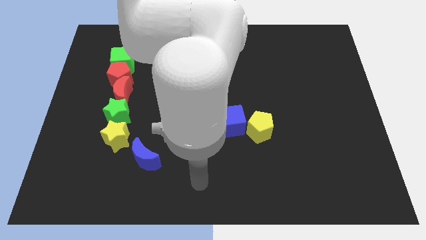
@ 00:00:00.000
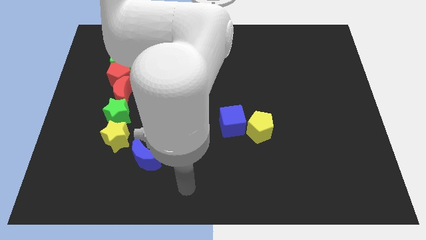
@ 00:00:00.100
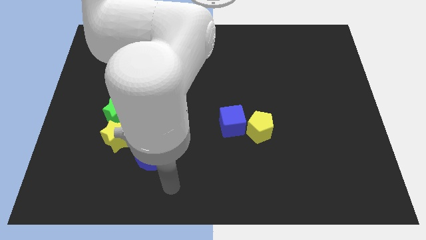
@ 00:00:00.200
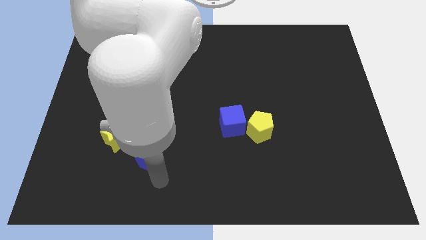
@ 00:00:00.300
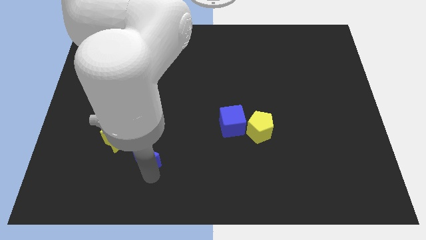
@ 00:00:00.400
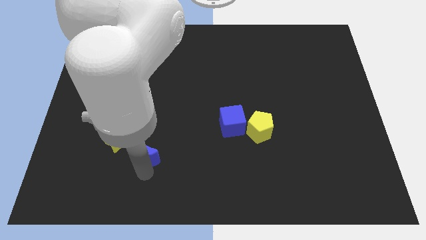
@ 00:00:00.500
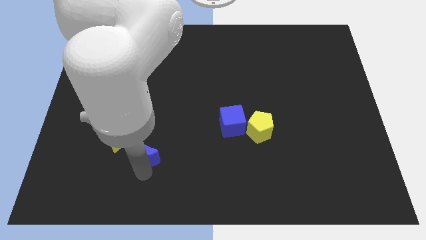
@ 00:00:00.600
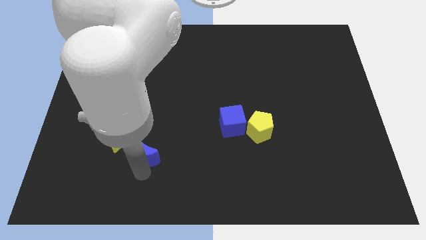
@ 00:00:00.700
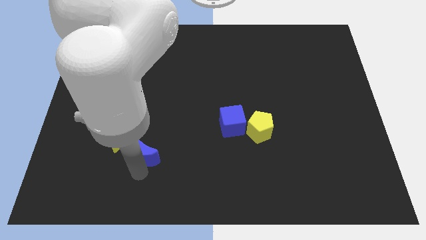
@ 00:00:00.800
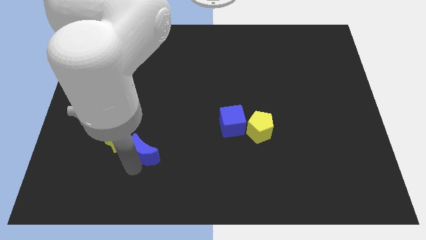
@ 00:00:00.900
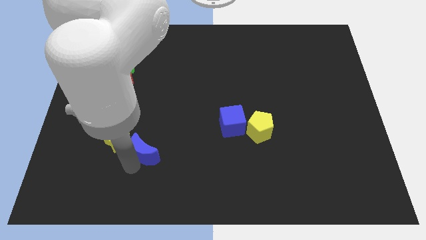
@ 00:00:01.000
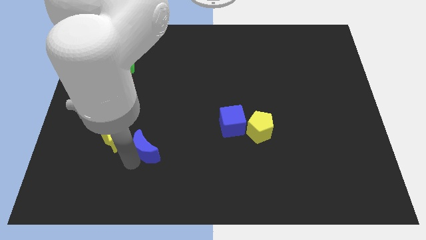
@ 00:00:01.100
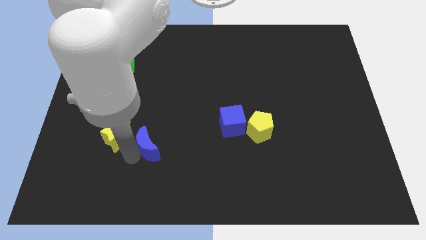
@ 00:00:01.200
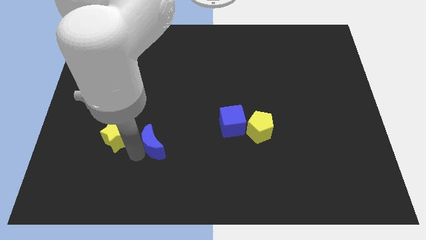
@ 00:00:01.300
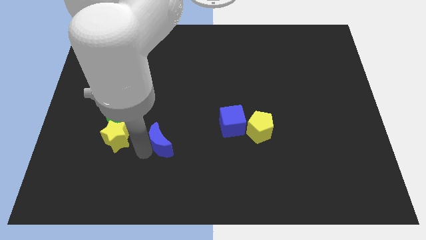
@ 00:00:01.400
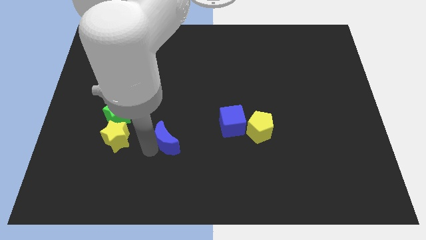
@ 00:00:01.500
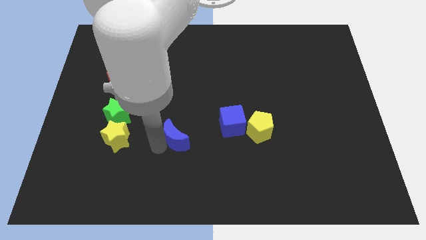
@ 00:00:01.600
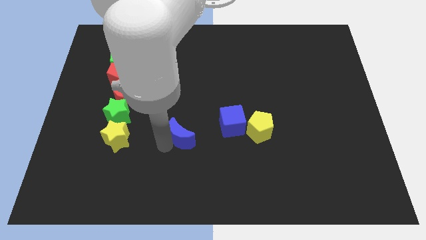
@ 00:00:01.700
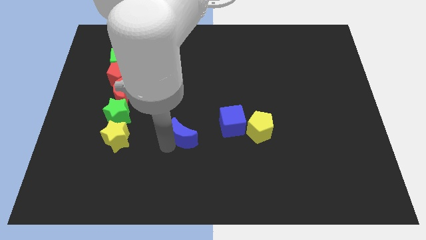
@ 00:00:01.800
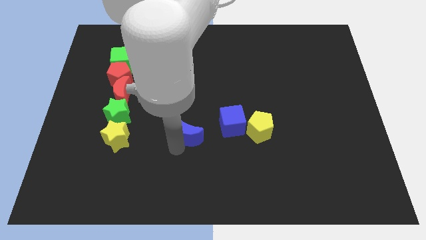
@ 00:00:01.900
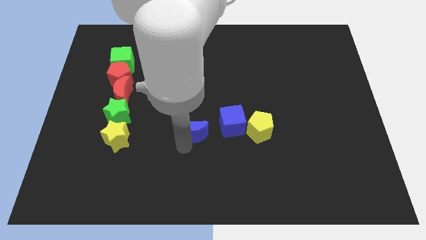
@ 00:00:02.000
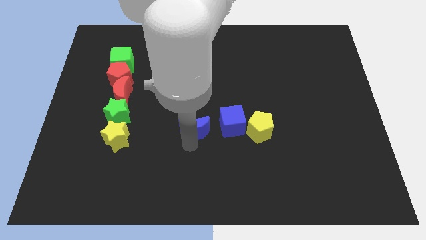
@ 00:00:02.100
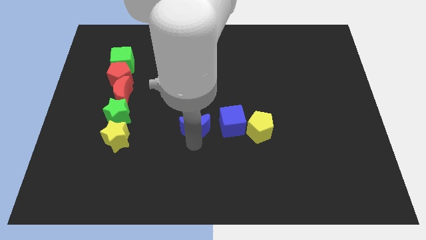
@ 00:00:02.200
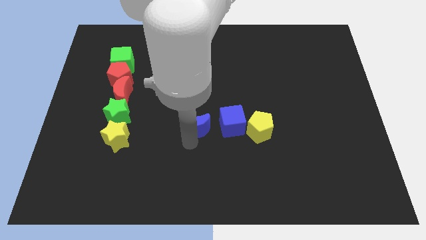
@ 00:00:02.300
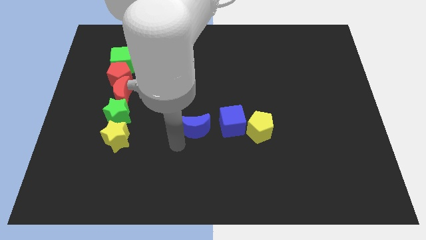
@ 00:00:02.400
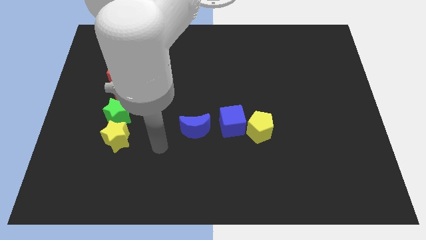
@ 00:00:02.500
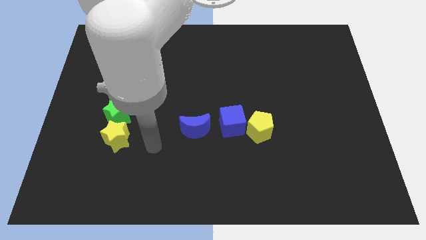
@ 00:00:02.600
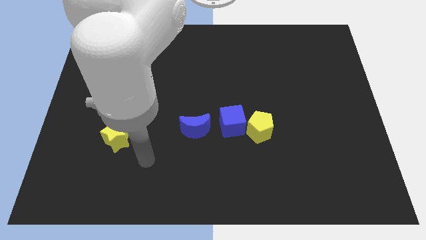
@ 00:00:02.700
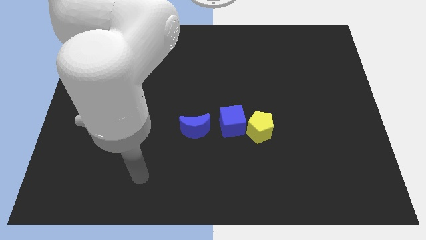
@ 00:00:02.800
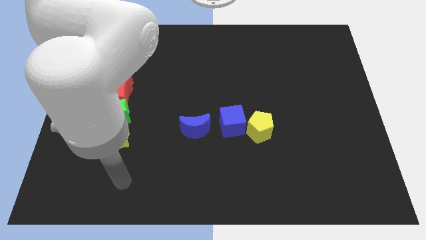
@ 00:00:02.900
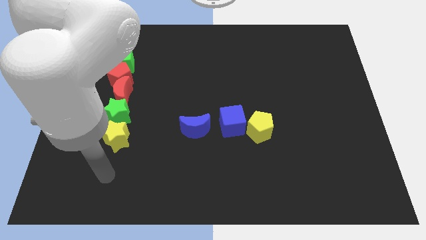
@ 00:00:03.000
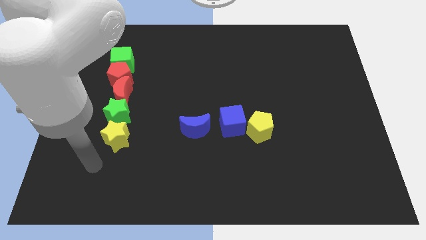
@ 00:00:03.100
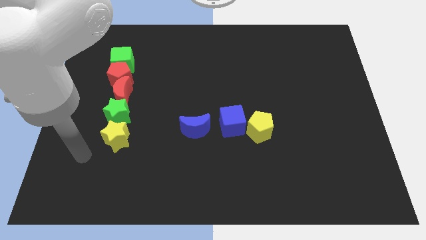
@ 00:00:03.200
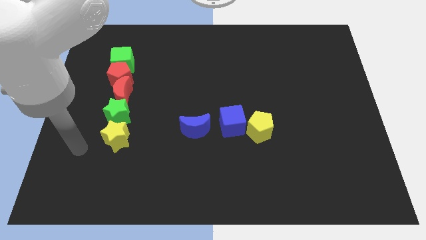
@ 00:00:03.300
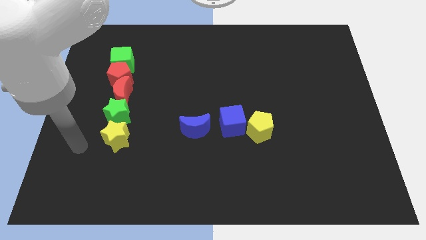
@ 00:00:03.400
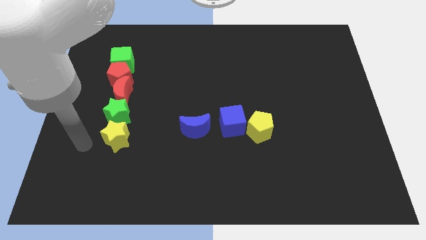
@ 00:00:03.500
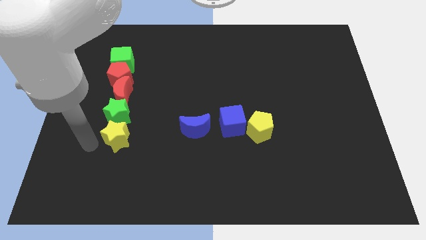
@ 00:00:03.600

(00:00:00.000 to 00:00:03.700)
move the blue crescent to the left of the blue cube

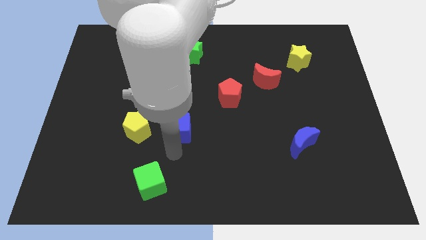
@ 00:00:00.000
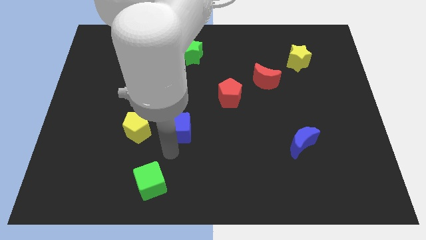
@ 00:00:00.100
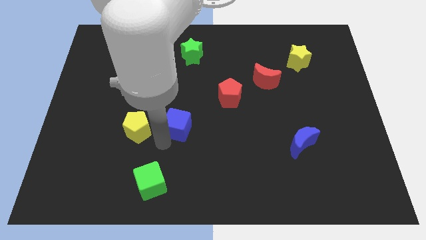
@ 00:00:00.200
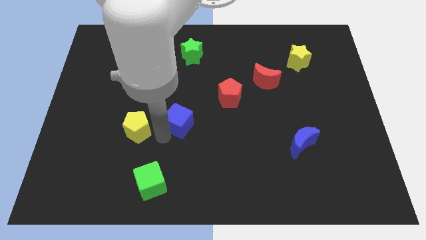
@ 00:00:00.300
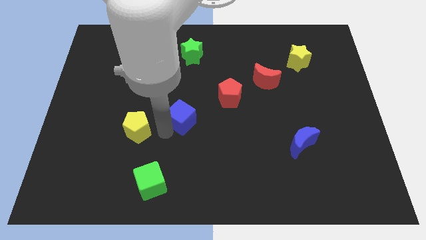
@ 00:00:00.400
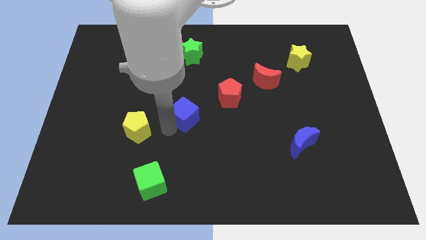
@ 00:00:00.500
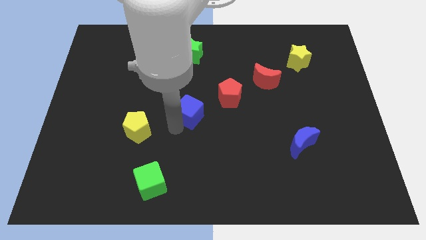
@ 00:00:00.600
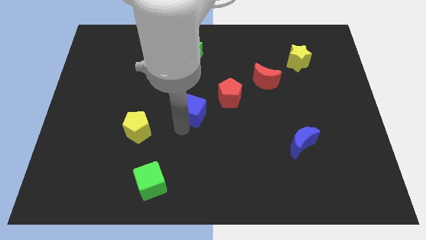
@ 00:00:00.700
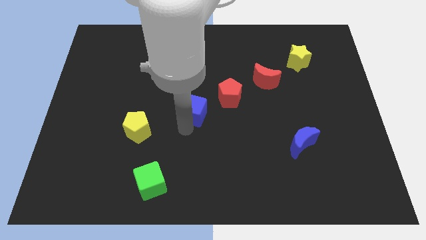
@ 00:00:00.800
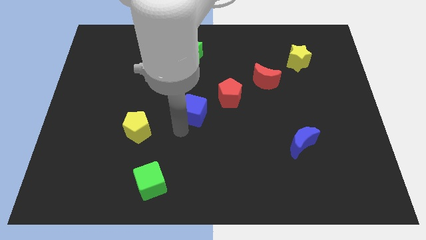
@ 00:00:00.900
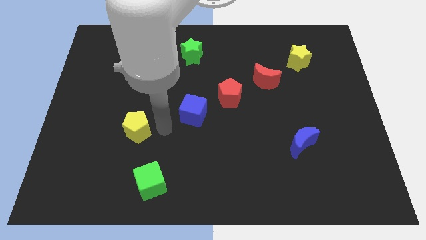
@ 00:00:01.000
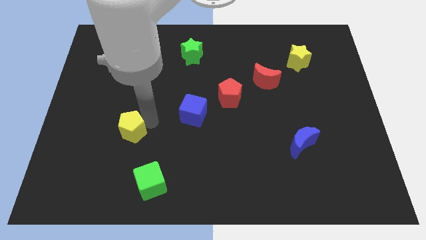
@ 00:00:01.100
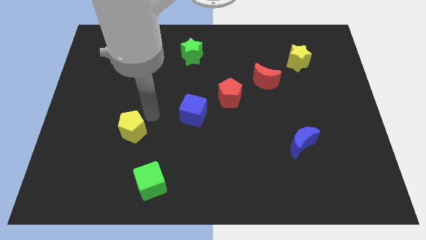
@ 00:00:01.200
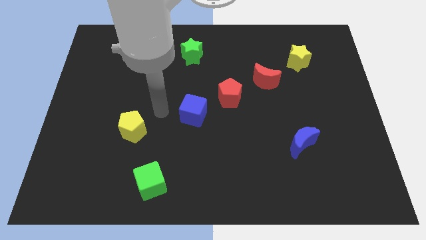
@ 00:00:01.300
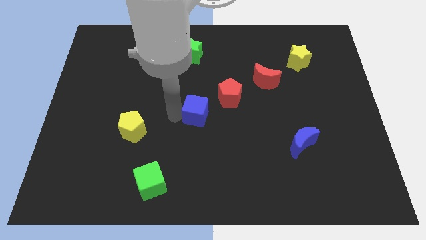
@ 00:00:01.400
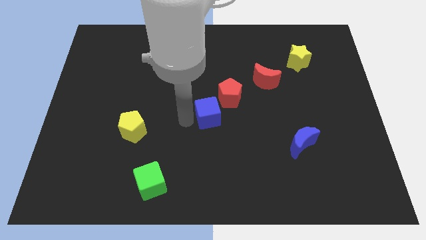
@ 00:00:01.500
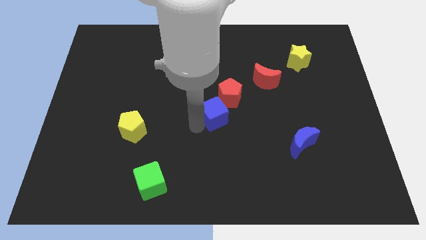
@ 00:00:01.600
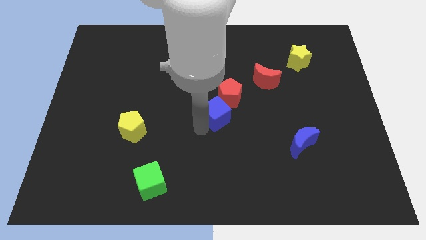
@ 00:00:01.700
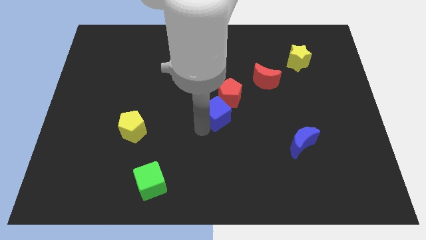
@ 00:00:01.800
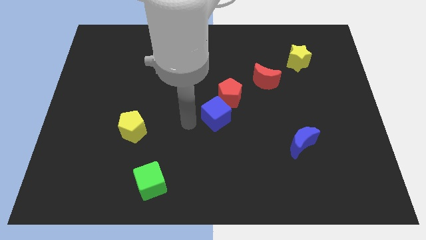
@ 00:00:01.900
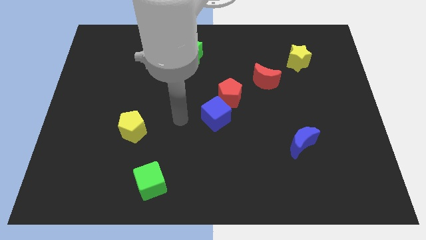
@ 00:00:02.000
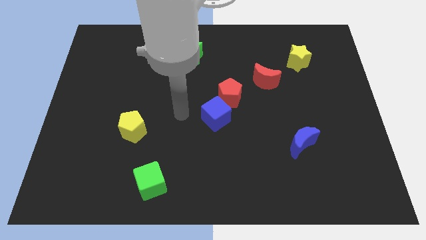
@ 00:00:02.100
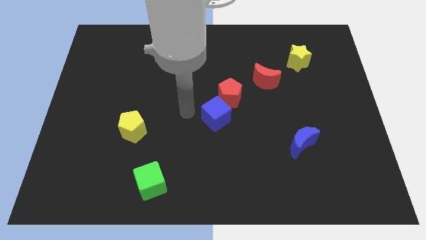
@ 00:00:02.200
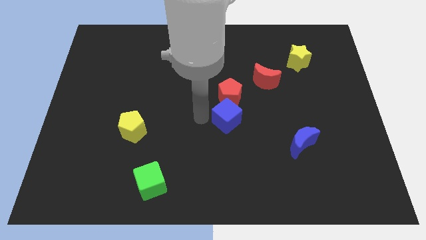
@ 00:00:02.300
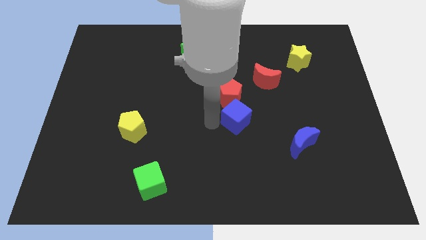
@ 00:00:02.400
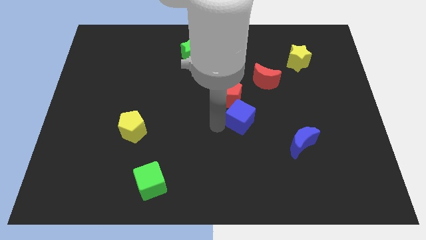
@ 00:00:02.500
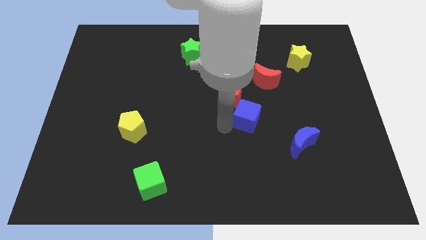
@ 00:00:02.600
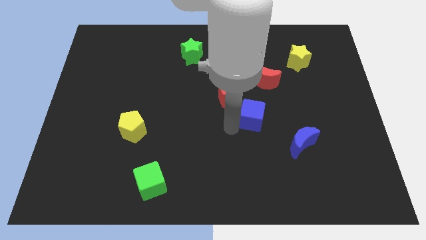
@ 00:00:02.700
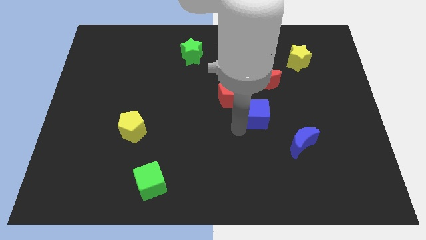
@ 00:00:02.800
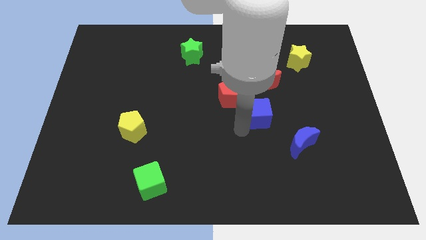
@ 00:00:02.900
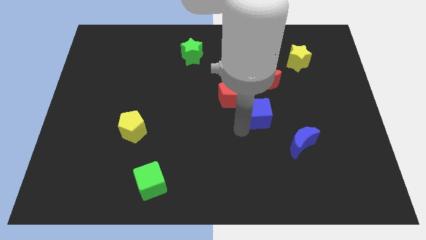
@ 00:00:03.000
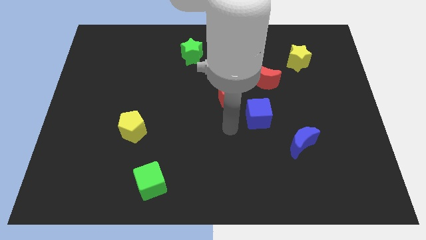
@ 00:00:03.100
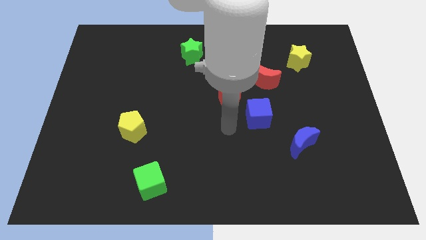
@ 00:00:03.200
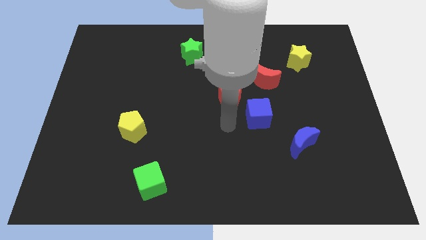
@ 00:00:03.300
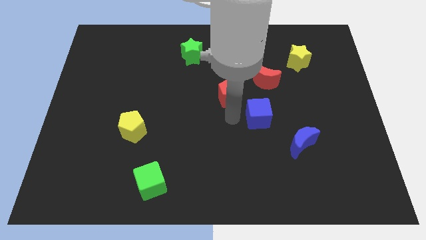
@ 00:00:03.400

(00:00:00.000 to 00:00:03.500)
slide the blue cube in between blue moon and red pentagon

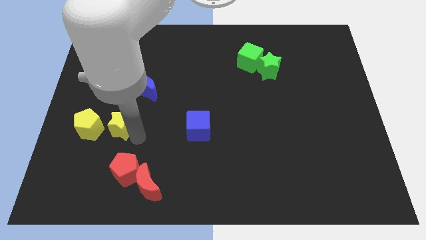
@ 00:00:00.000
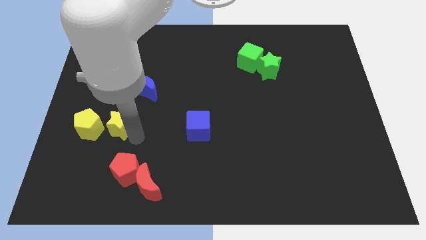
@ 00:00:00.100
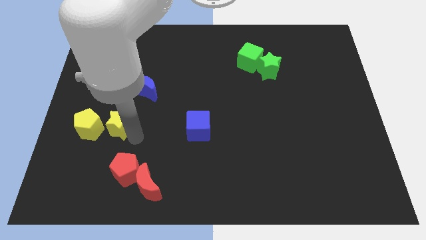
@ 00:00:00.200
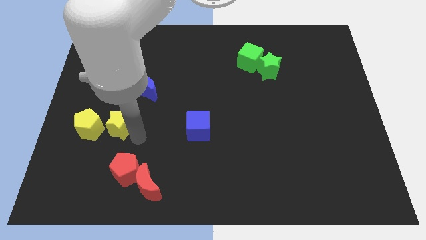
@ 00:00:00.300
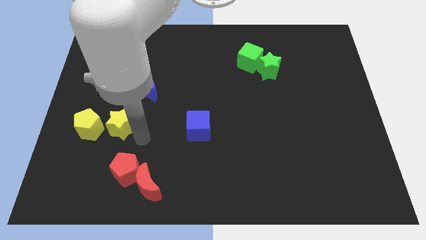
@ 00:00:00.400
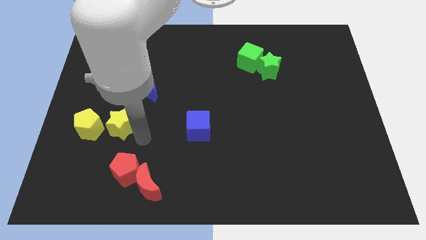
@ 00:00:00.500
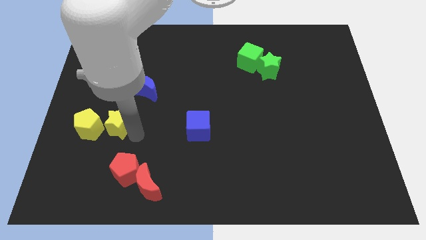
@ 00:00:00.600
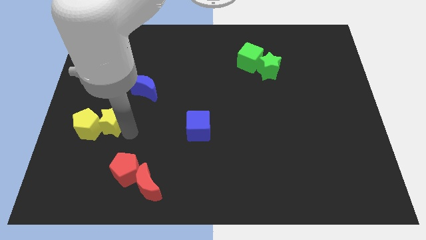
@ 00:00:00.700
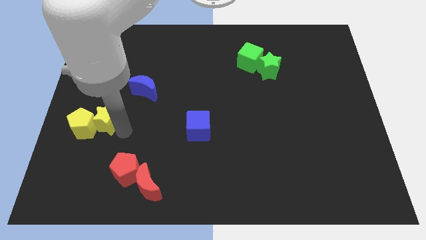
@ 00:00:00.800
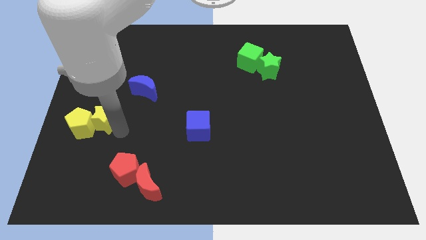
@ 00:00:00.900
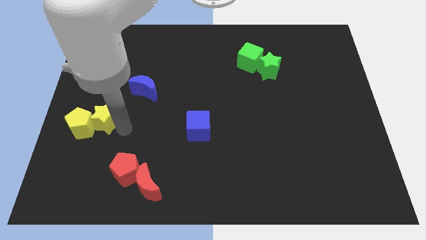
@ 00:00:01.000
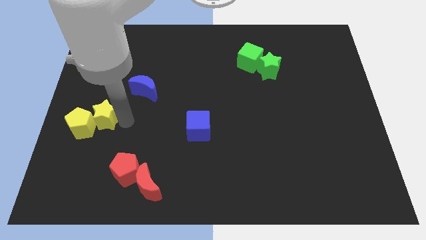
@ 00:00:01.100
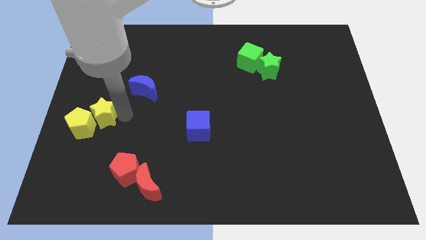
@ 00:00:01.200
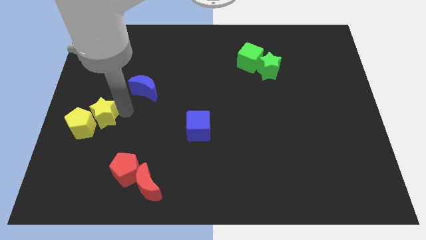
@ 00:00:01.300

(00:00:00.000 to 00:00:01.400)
push the yellow star into the yellow pentagon from the right

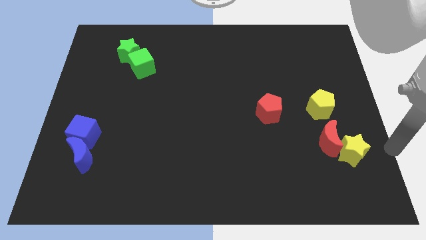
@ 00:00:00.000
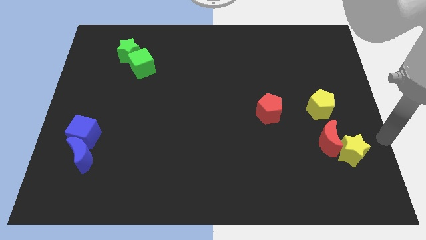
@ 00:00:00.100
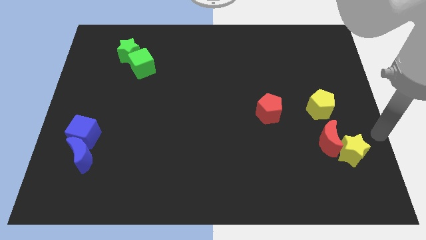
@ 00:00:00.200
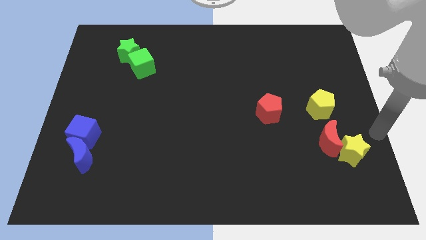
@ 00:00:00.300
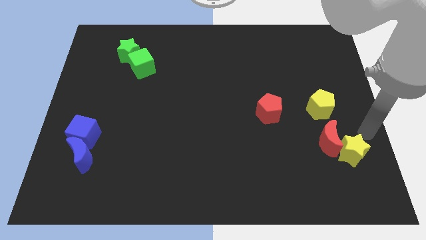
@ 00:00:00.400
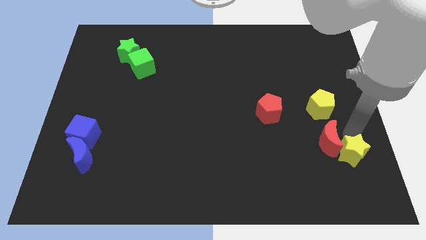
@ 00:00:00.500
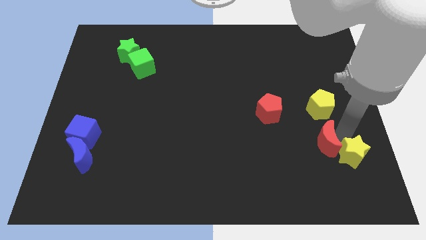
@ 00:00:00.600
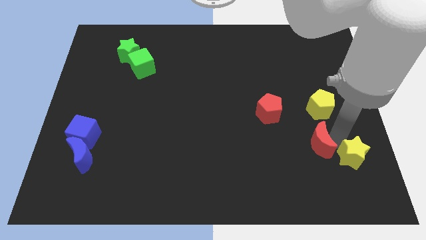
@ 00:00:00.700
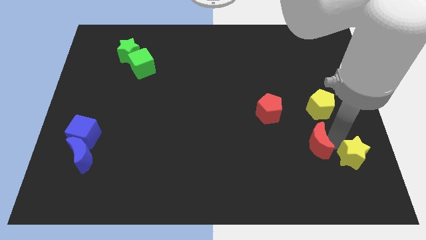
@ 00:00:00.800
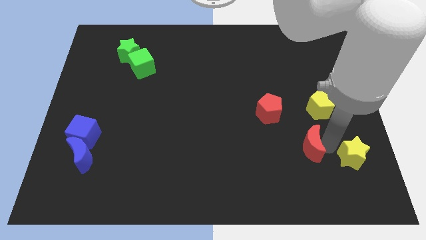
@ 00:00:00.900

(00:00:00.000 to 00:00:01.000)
move red moon slightly left
